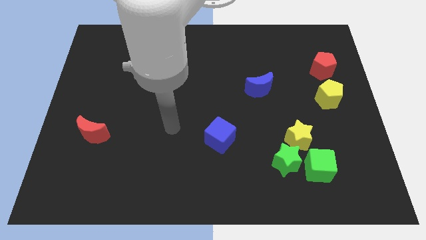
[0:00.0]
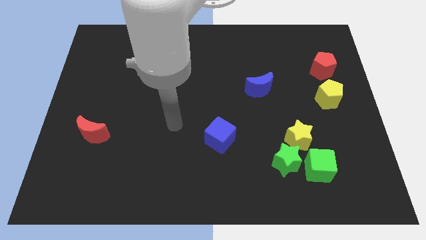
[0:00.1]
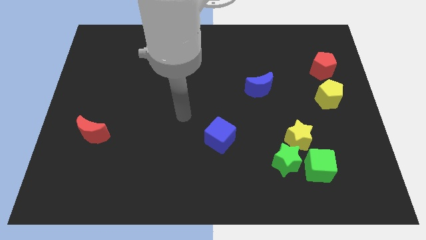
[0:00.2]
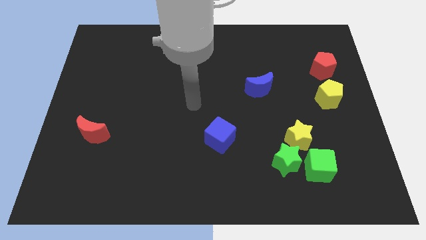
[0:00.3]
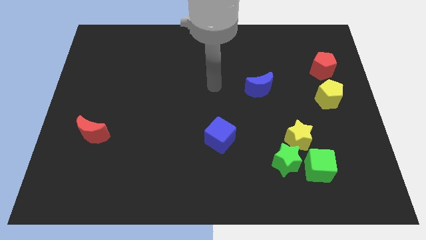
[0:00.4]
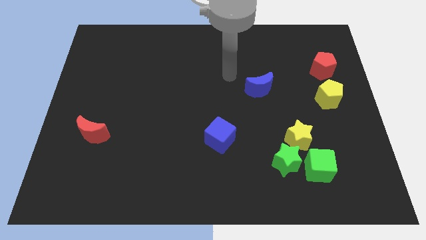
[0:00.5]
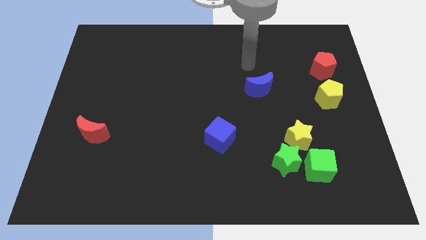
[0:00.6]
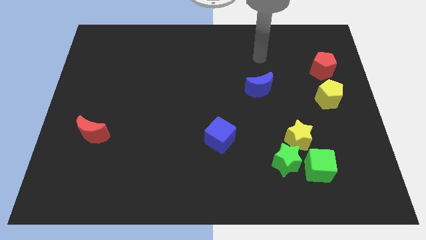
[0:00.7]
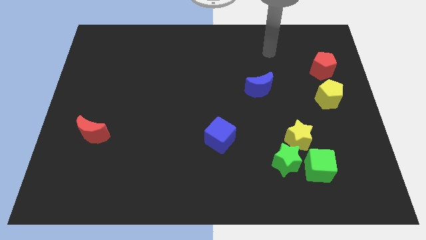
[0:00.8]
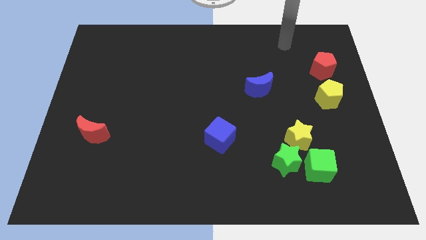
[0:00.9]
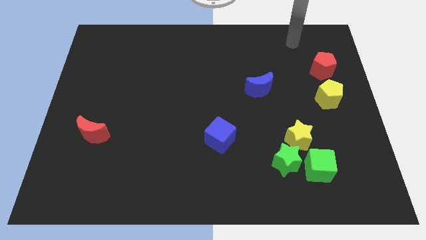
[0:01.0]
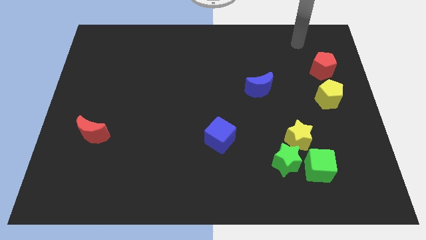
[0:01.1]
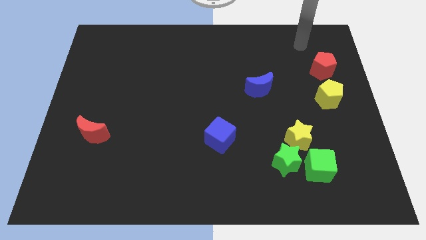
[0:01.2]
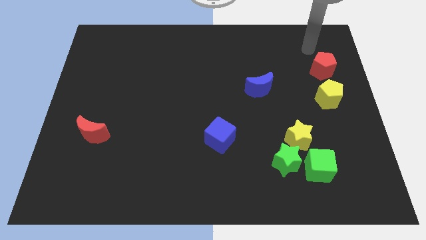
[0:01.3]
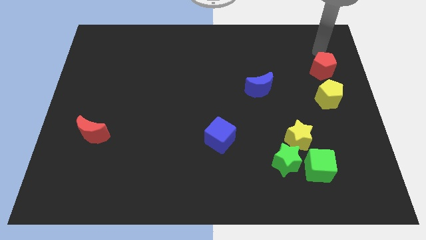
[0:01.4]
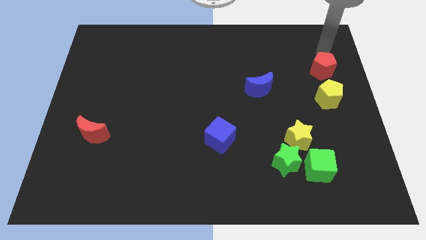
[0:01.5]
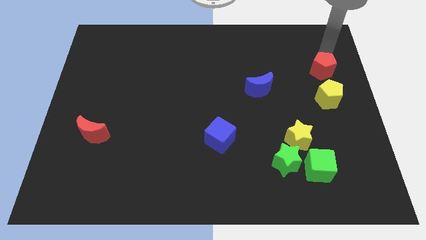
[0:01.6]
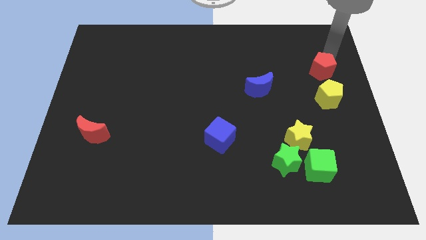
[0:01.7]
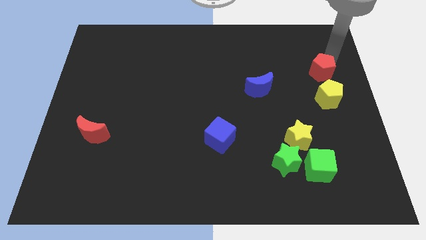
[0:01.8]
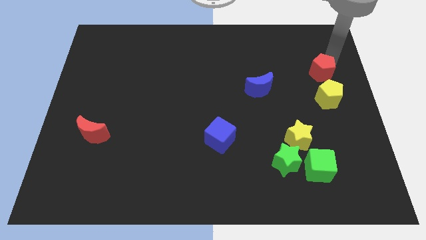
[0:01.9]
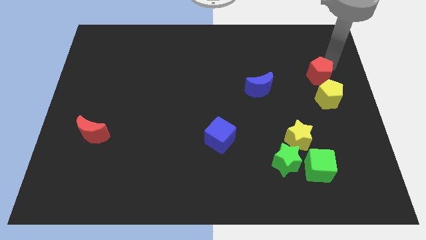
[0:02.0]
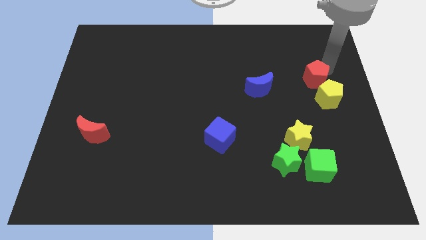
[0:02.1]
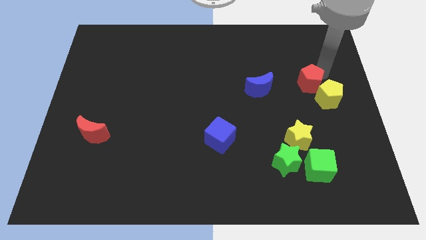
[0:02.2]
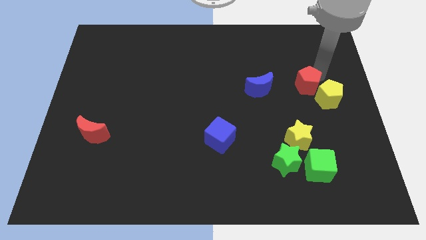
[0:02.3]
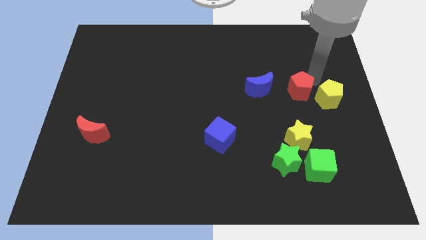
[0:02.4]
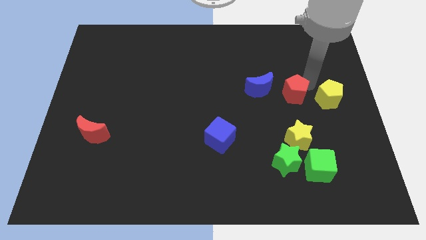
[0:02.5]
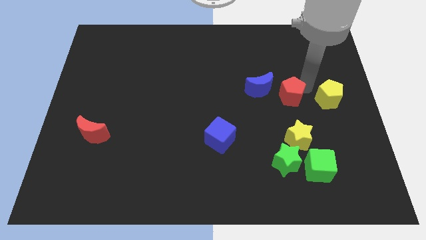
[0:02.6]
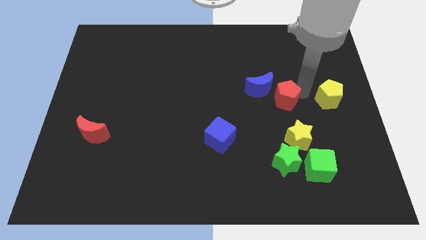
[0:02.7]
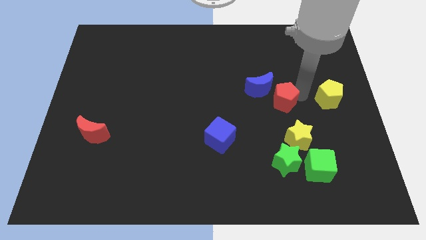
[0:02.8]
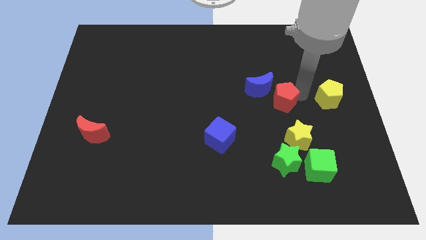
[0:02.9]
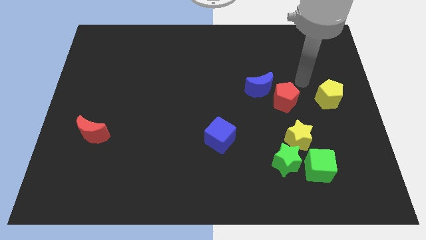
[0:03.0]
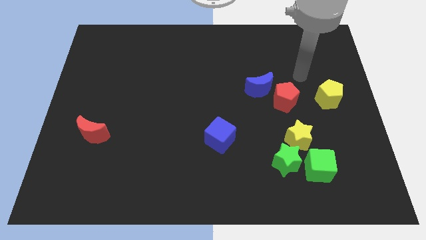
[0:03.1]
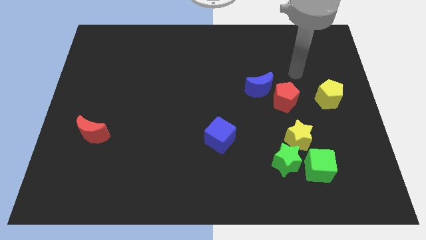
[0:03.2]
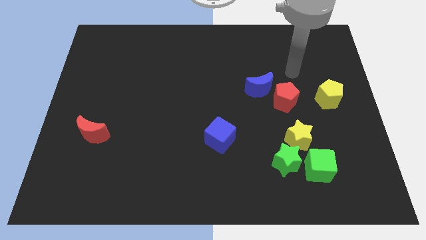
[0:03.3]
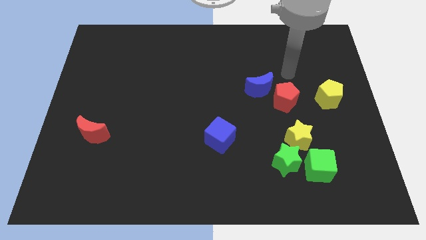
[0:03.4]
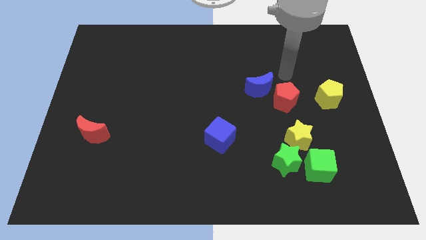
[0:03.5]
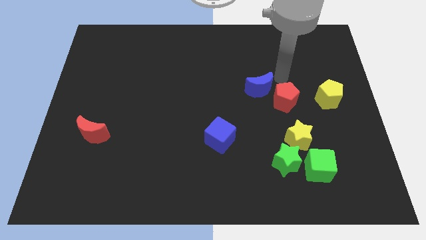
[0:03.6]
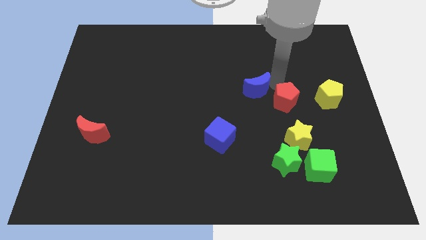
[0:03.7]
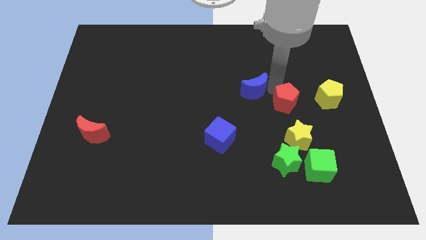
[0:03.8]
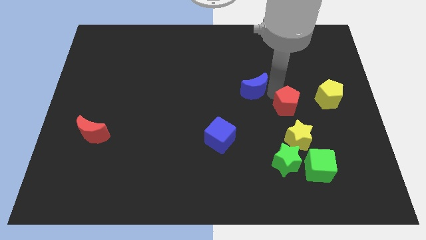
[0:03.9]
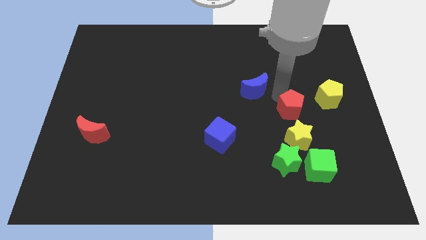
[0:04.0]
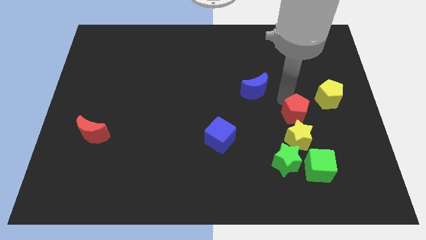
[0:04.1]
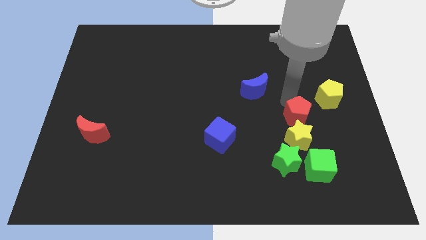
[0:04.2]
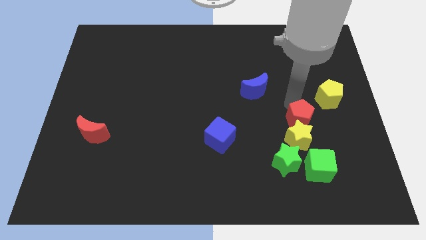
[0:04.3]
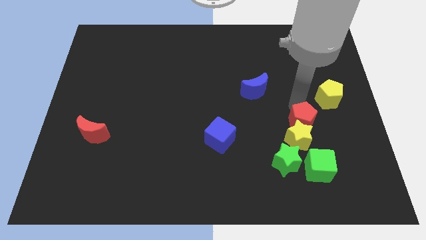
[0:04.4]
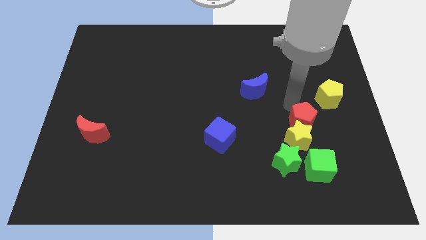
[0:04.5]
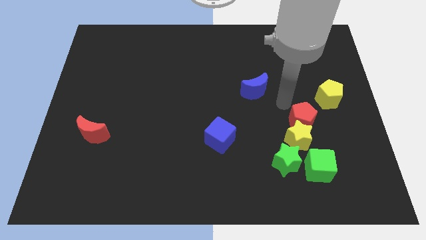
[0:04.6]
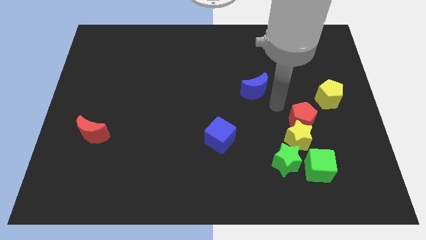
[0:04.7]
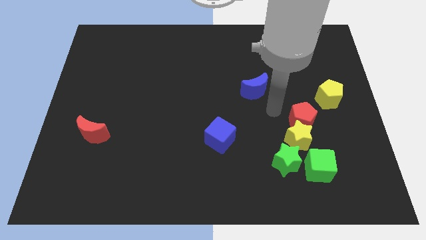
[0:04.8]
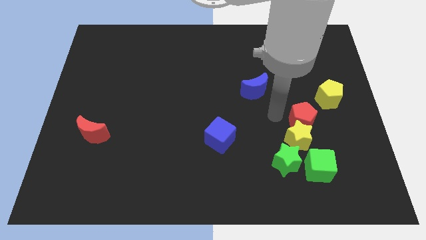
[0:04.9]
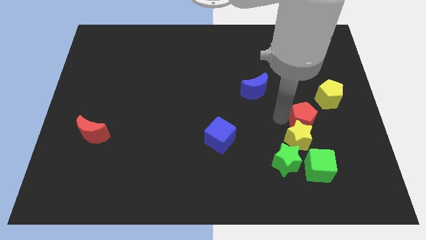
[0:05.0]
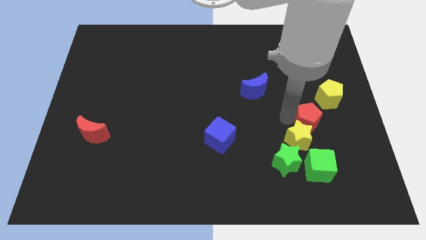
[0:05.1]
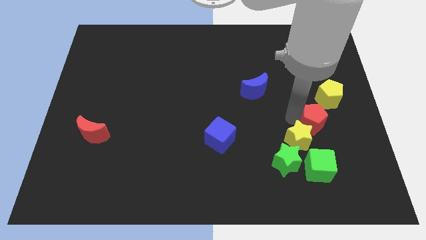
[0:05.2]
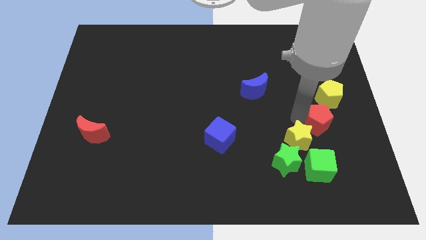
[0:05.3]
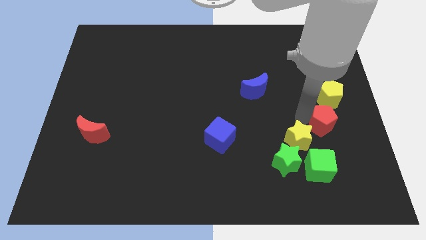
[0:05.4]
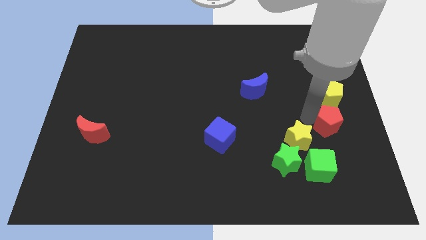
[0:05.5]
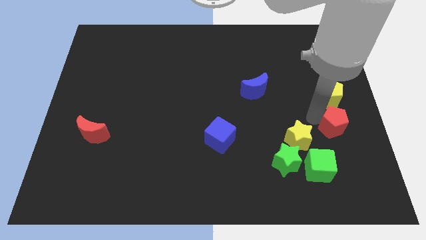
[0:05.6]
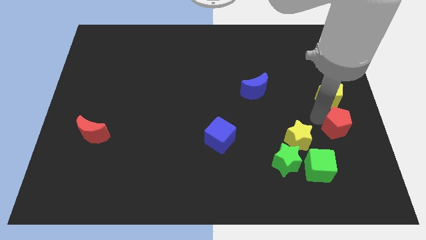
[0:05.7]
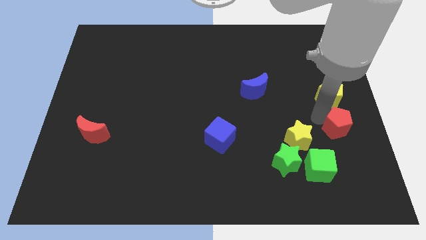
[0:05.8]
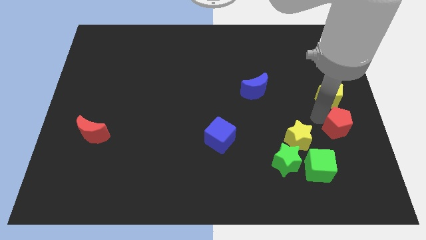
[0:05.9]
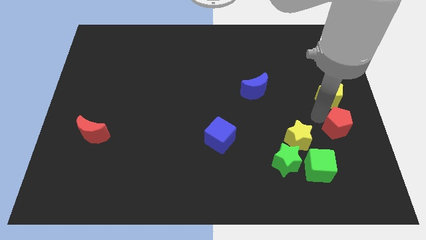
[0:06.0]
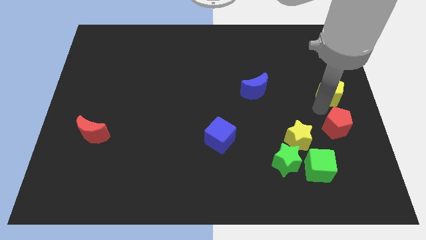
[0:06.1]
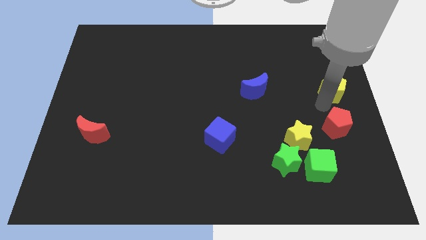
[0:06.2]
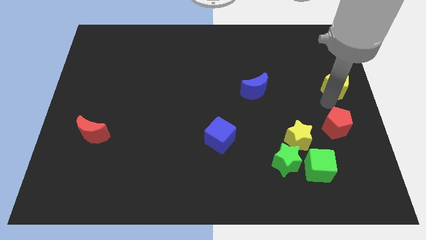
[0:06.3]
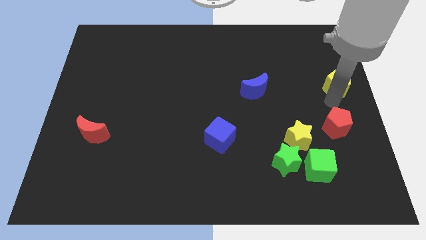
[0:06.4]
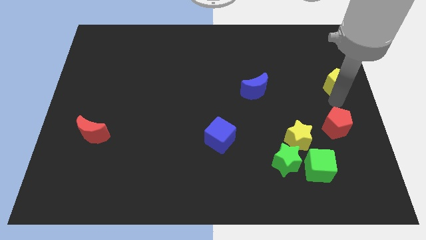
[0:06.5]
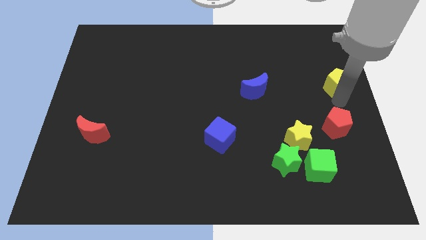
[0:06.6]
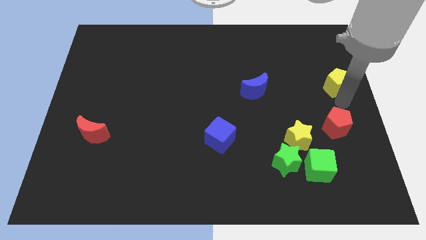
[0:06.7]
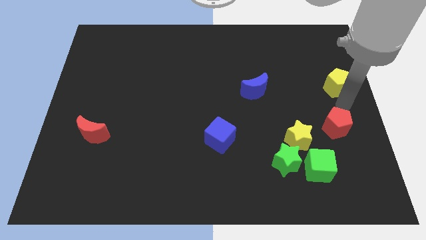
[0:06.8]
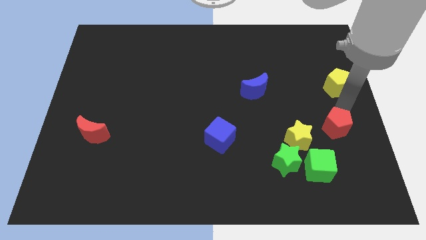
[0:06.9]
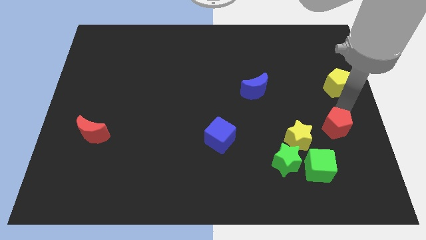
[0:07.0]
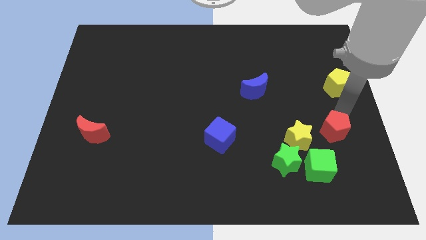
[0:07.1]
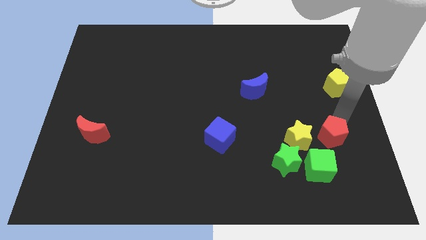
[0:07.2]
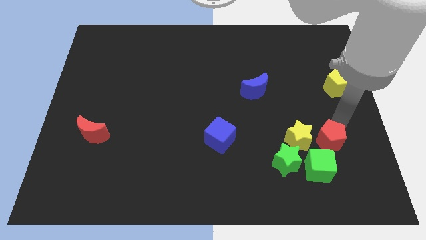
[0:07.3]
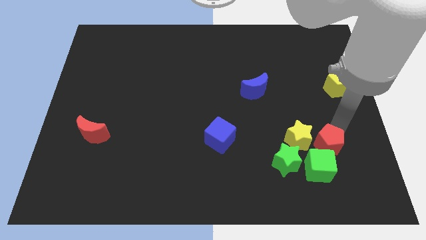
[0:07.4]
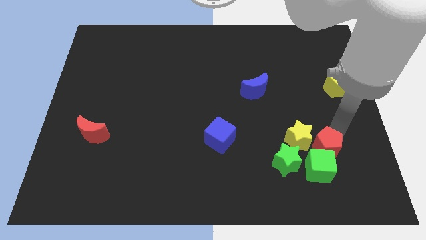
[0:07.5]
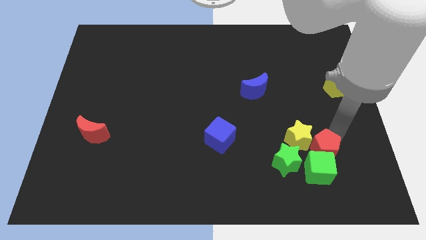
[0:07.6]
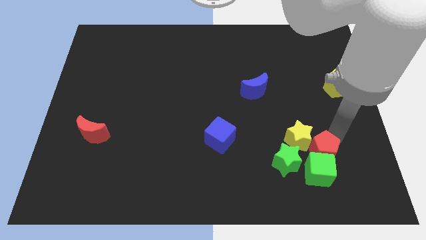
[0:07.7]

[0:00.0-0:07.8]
move the red pentagon next to the green cube
